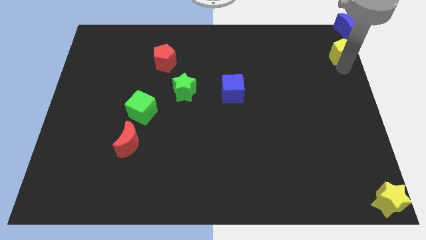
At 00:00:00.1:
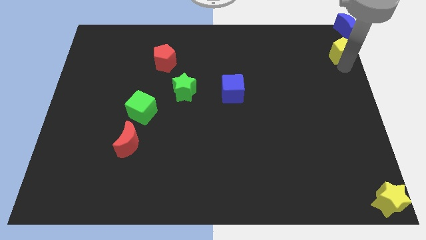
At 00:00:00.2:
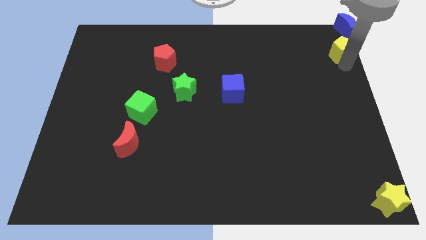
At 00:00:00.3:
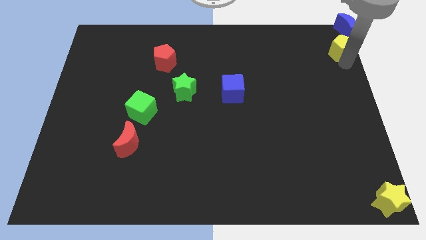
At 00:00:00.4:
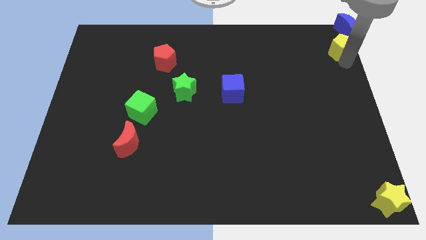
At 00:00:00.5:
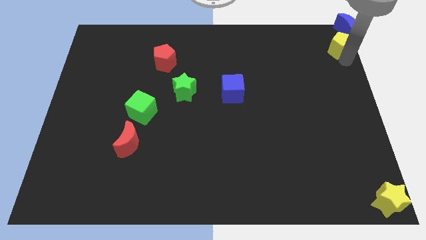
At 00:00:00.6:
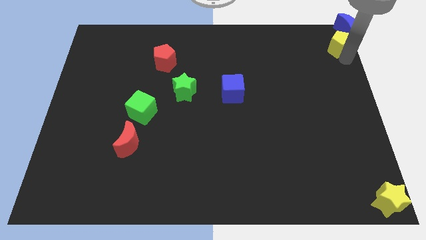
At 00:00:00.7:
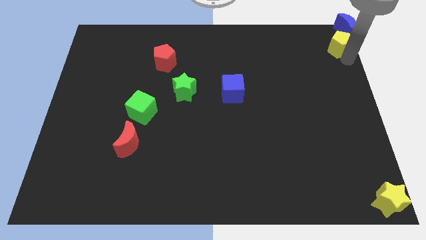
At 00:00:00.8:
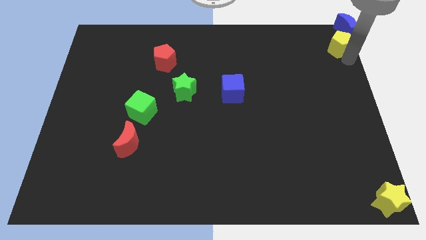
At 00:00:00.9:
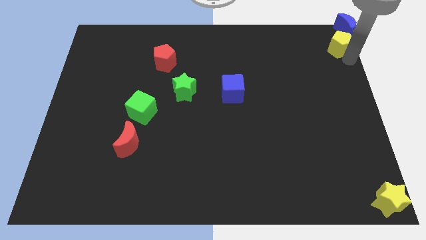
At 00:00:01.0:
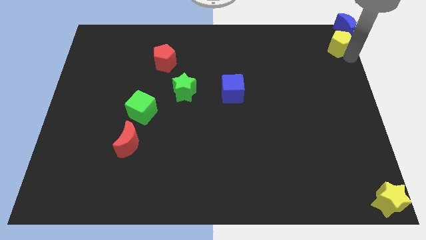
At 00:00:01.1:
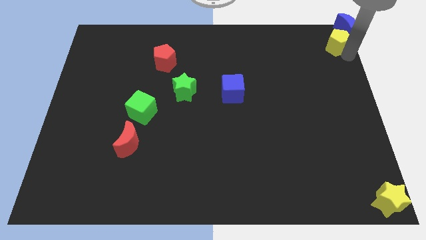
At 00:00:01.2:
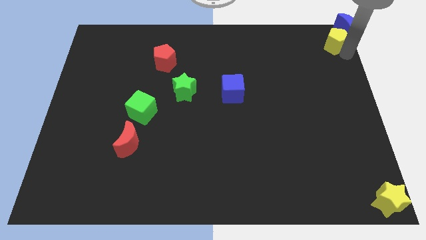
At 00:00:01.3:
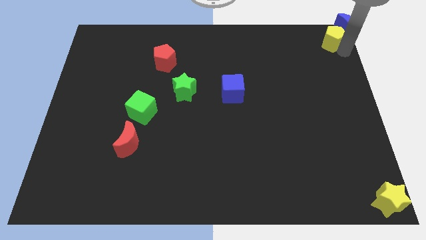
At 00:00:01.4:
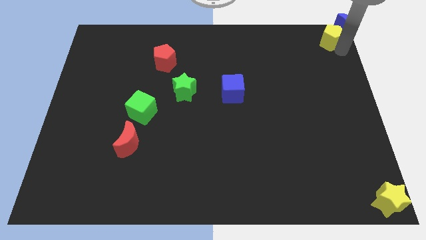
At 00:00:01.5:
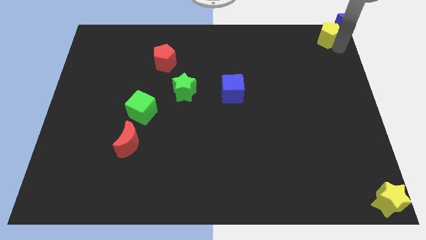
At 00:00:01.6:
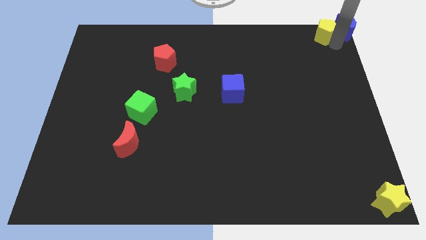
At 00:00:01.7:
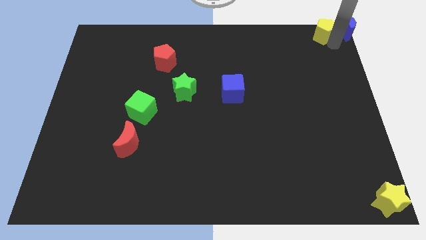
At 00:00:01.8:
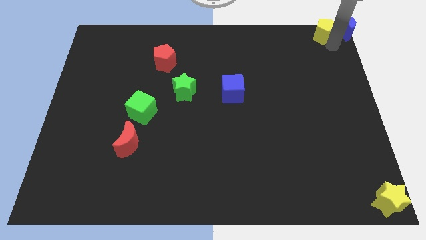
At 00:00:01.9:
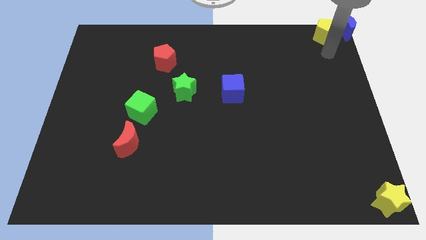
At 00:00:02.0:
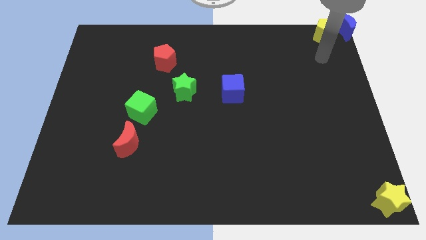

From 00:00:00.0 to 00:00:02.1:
move the yellow pentagon to the top right corner

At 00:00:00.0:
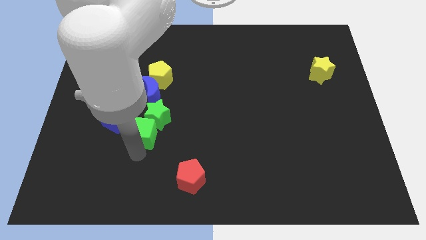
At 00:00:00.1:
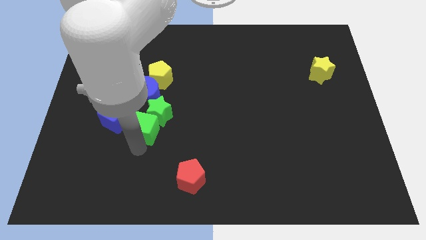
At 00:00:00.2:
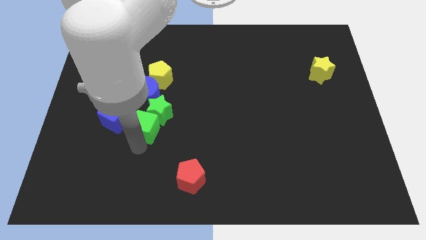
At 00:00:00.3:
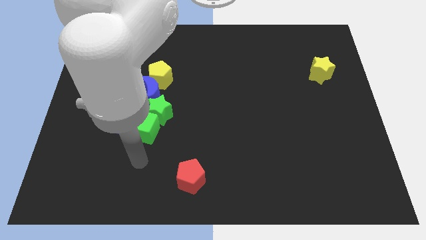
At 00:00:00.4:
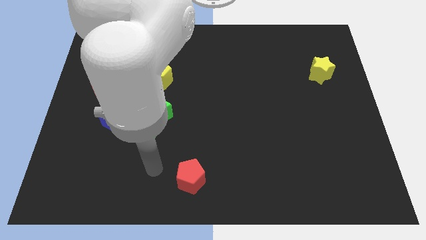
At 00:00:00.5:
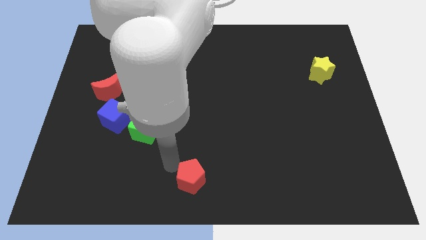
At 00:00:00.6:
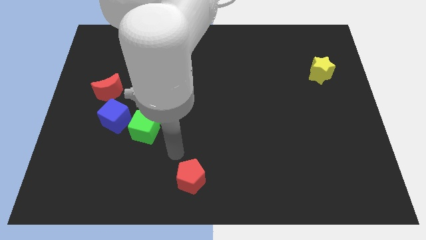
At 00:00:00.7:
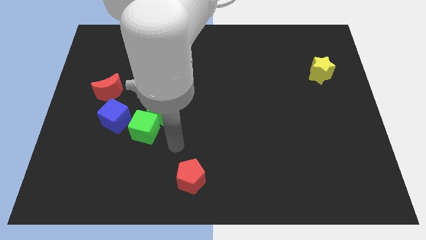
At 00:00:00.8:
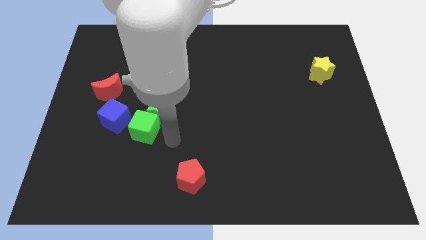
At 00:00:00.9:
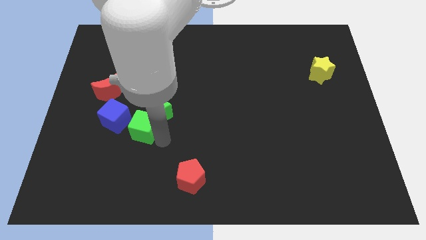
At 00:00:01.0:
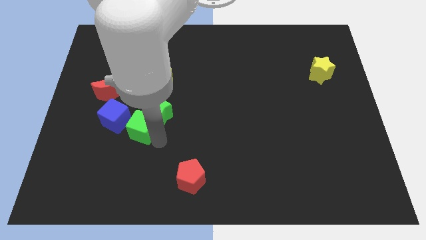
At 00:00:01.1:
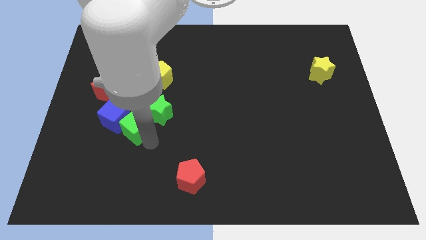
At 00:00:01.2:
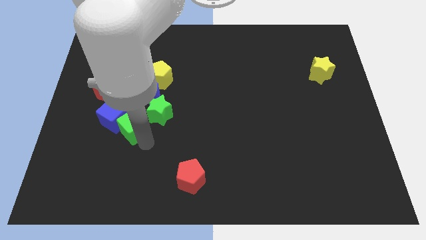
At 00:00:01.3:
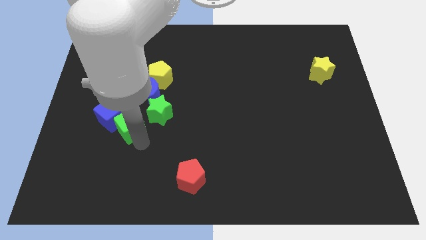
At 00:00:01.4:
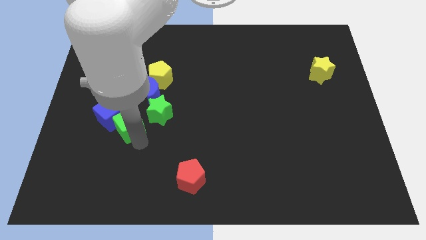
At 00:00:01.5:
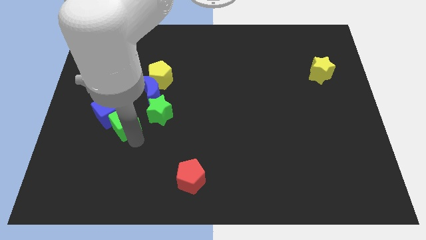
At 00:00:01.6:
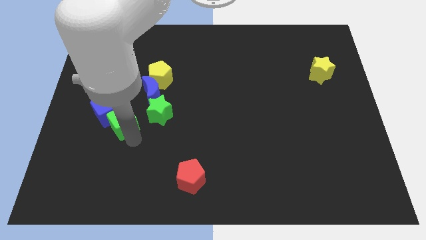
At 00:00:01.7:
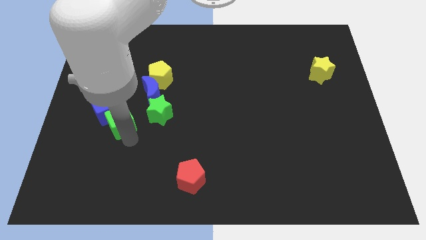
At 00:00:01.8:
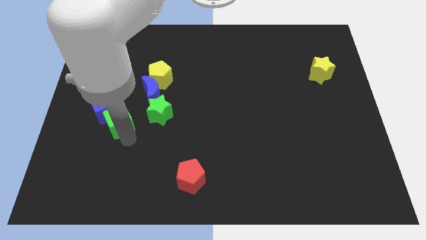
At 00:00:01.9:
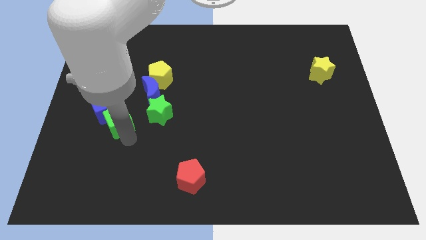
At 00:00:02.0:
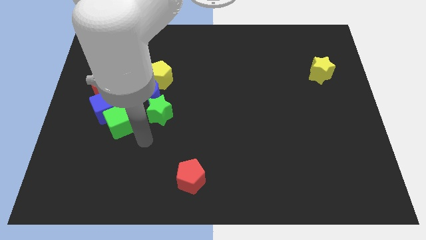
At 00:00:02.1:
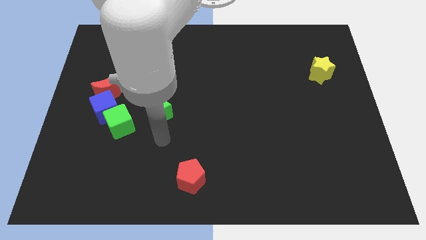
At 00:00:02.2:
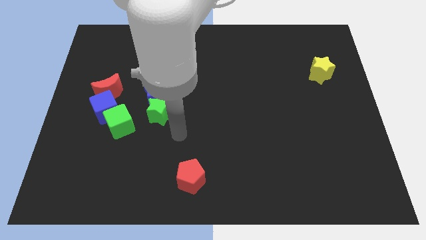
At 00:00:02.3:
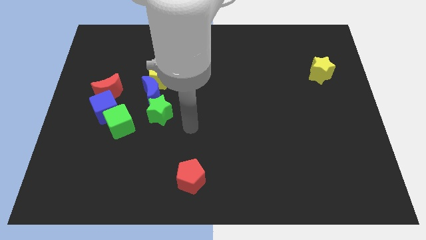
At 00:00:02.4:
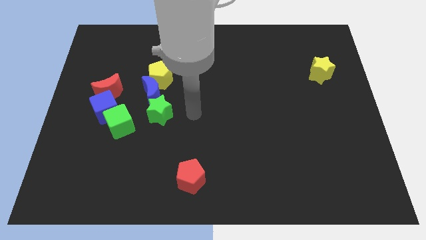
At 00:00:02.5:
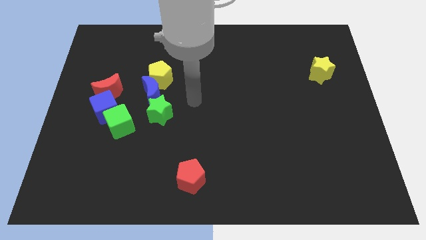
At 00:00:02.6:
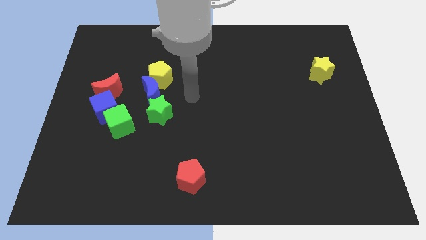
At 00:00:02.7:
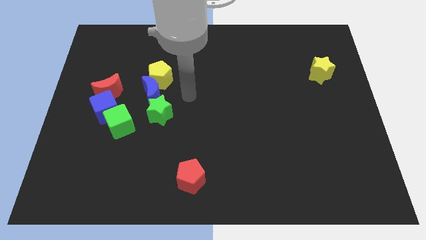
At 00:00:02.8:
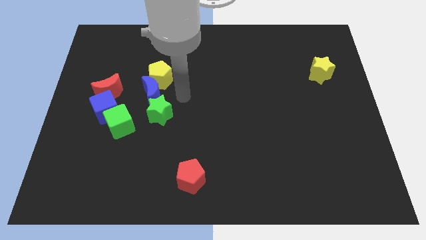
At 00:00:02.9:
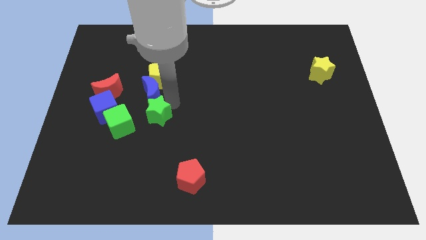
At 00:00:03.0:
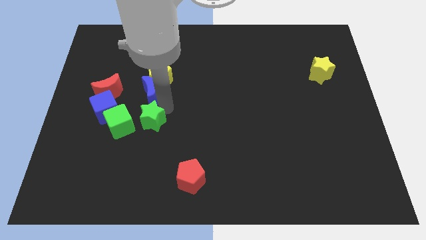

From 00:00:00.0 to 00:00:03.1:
place your arm on top of green star

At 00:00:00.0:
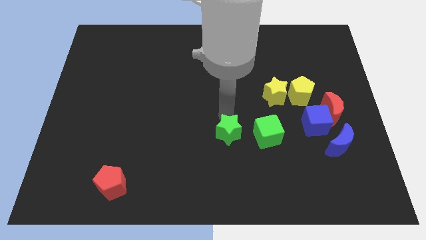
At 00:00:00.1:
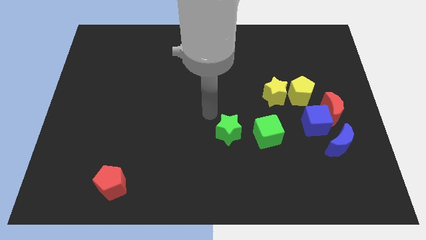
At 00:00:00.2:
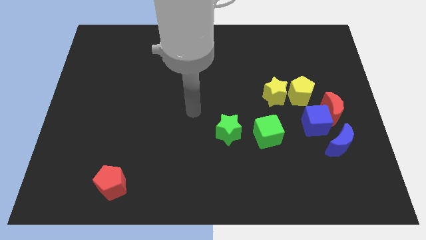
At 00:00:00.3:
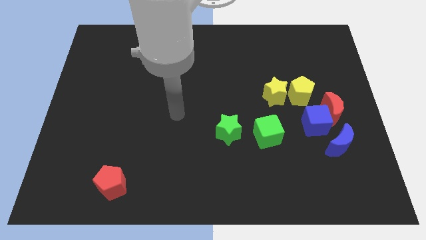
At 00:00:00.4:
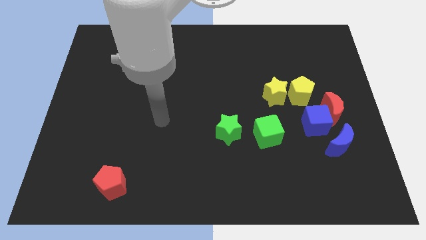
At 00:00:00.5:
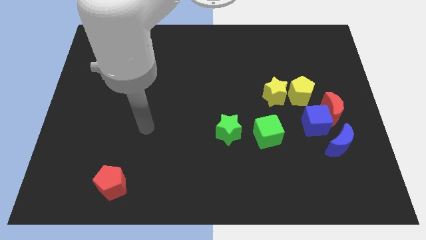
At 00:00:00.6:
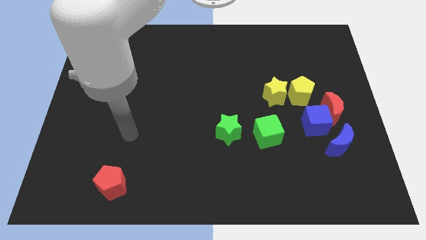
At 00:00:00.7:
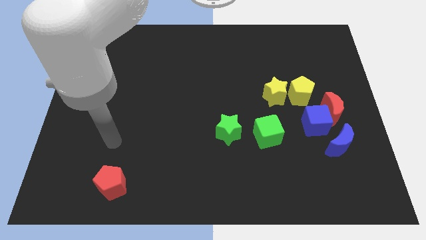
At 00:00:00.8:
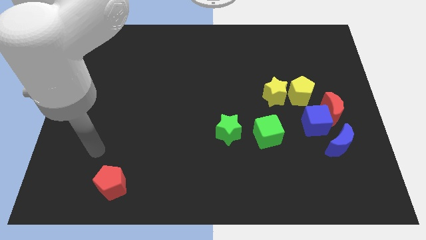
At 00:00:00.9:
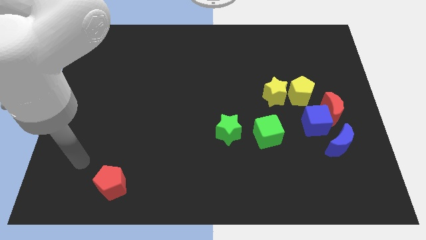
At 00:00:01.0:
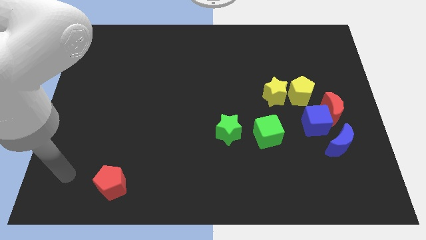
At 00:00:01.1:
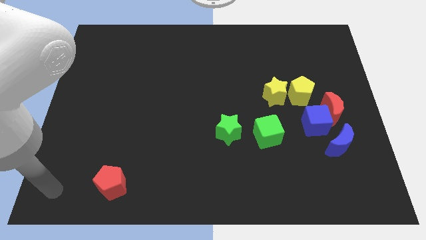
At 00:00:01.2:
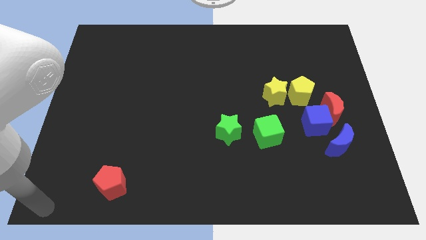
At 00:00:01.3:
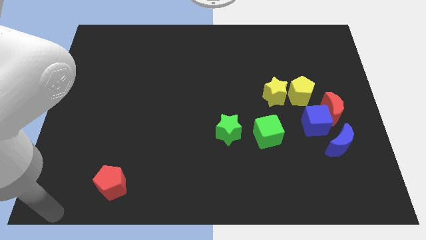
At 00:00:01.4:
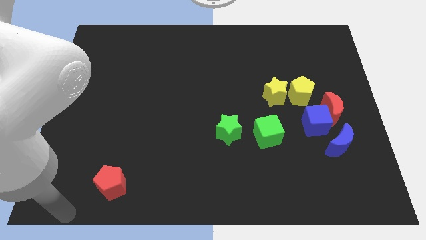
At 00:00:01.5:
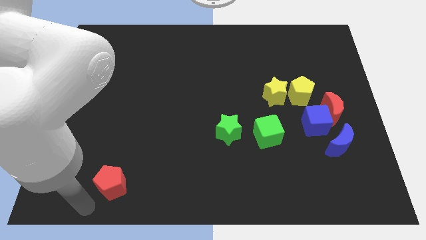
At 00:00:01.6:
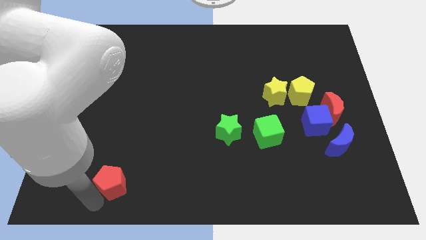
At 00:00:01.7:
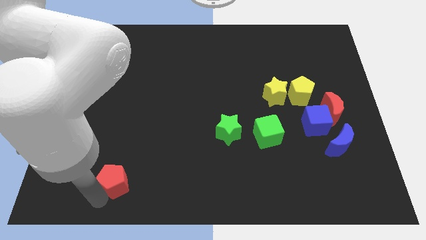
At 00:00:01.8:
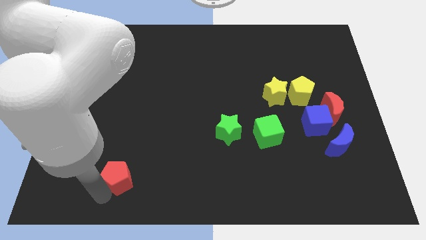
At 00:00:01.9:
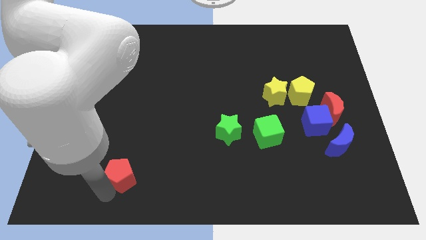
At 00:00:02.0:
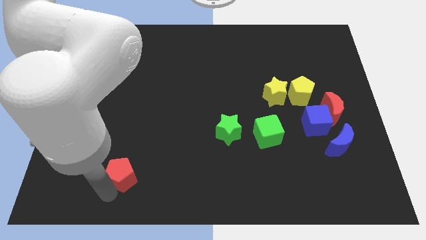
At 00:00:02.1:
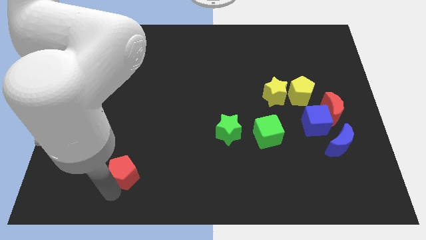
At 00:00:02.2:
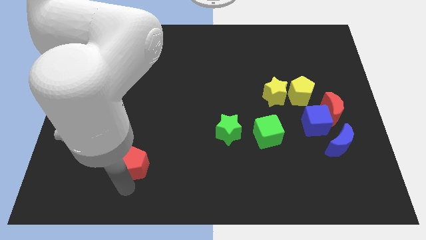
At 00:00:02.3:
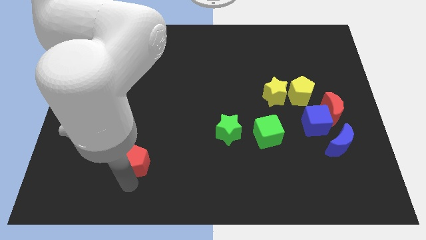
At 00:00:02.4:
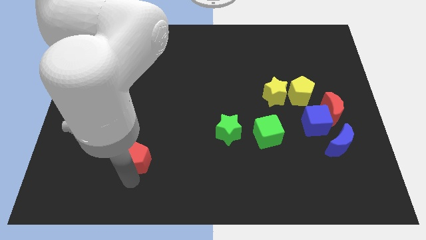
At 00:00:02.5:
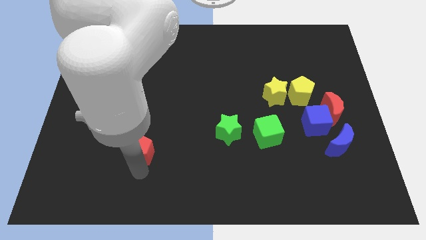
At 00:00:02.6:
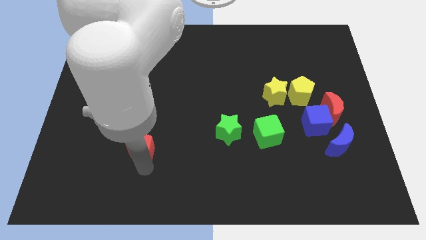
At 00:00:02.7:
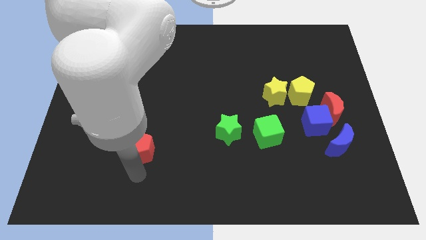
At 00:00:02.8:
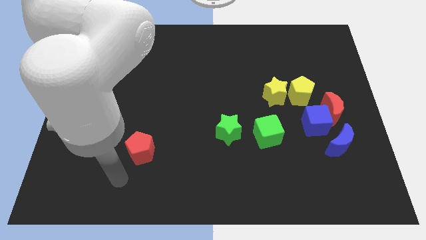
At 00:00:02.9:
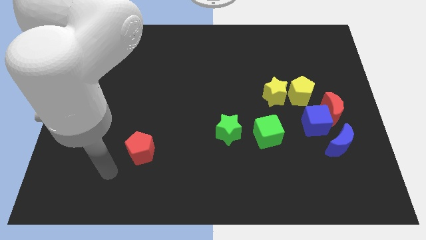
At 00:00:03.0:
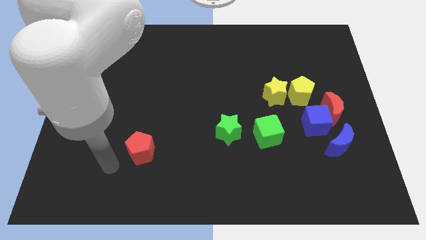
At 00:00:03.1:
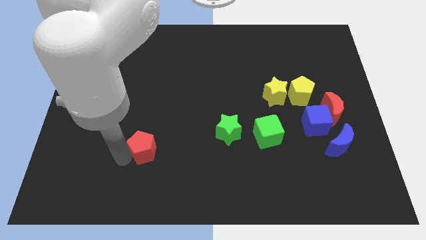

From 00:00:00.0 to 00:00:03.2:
pusg the red pentagon slightly to the top

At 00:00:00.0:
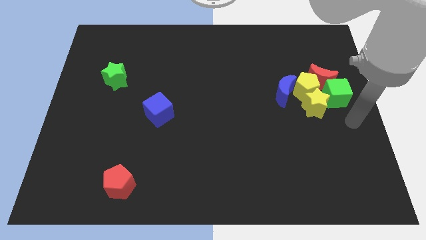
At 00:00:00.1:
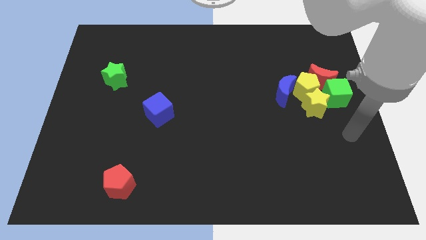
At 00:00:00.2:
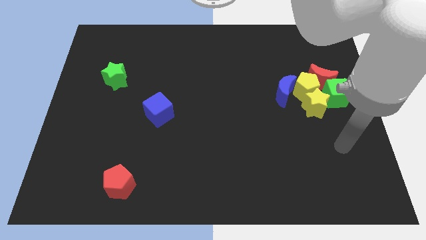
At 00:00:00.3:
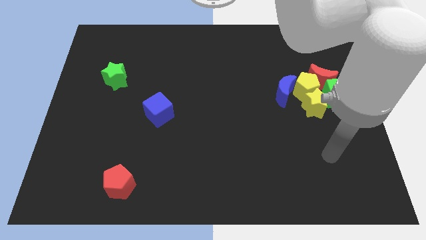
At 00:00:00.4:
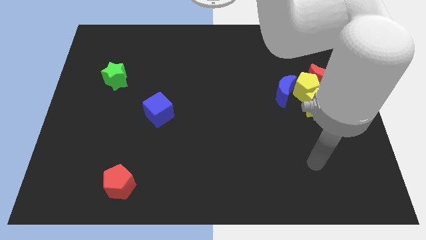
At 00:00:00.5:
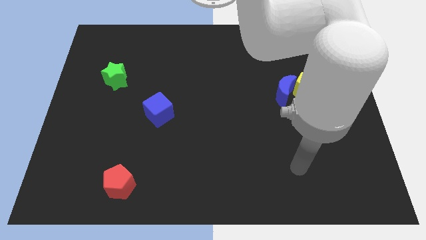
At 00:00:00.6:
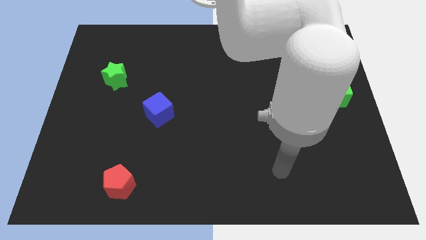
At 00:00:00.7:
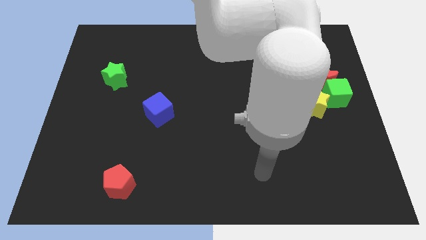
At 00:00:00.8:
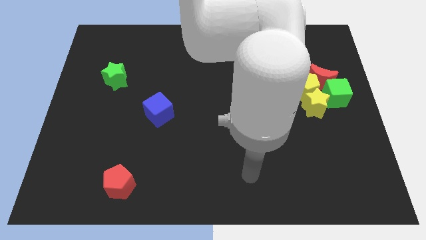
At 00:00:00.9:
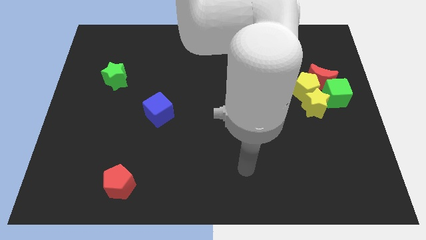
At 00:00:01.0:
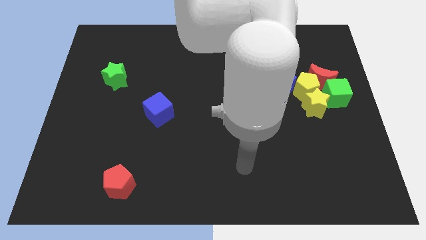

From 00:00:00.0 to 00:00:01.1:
move the arm towards the bottom center of the board
